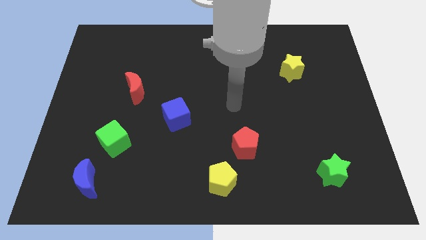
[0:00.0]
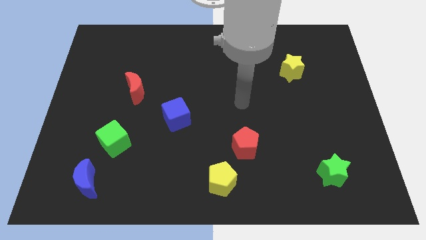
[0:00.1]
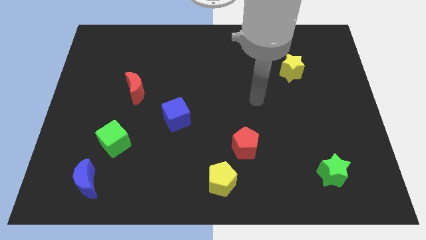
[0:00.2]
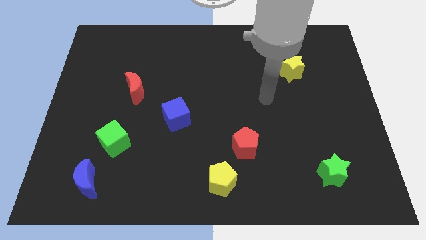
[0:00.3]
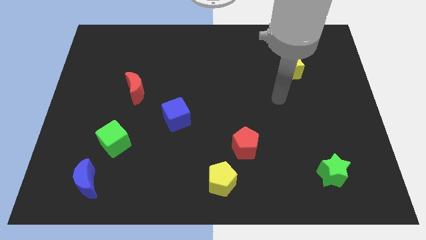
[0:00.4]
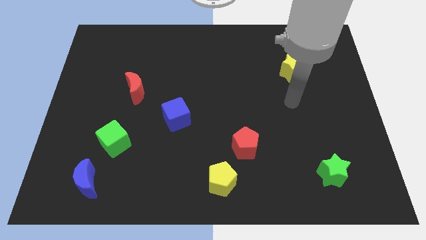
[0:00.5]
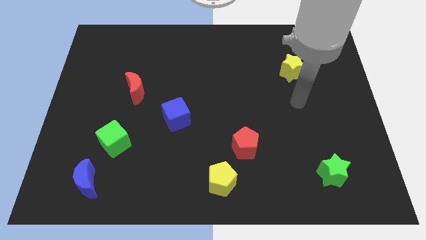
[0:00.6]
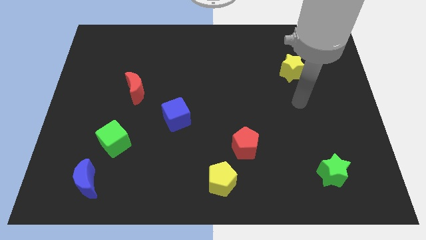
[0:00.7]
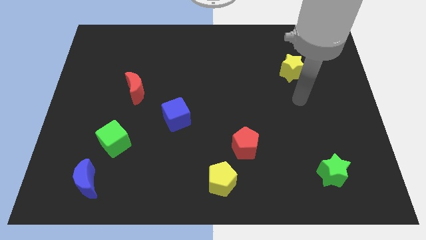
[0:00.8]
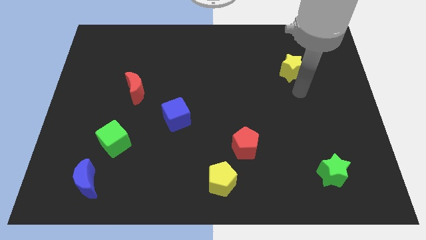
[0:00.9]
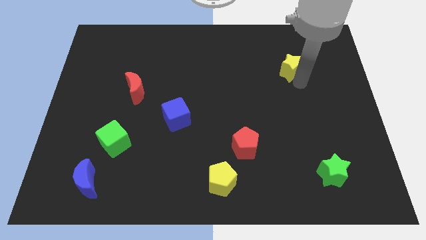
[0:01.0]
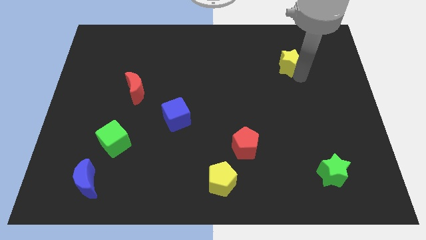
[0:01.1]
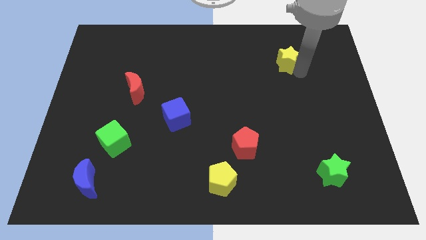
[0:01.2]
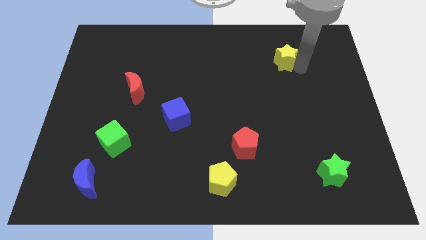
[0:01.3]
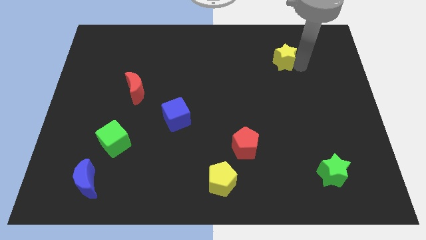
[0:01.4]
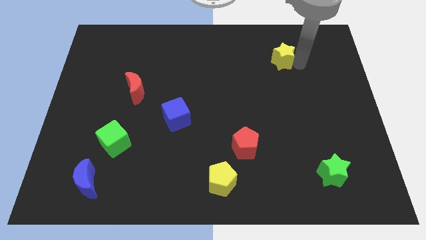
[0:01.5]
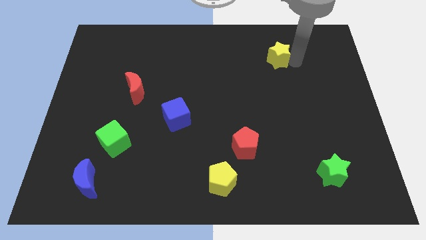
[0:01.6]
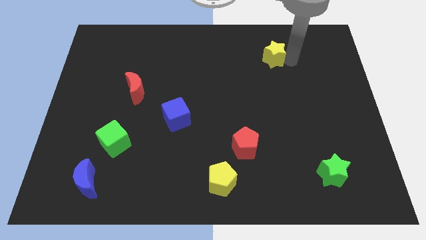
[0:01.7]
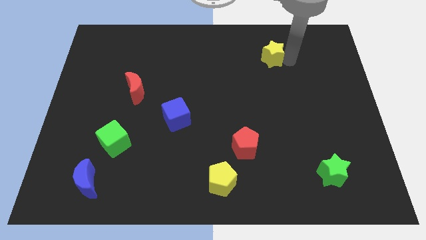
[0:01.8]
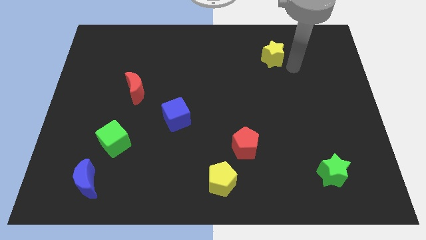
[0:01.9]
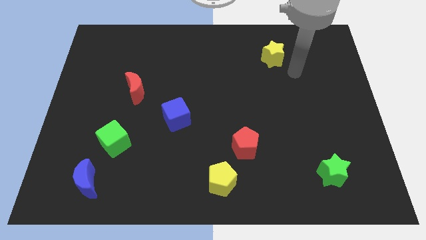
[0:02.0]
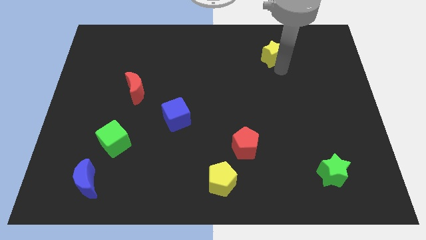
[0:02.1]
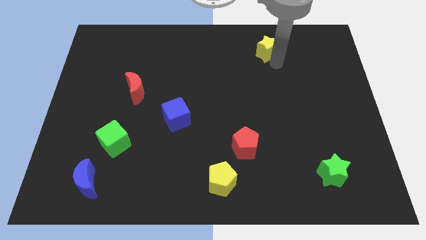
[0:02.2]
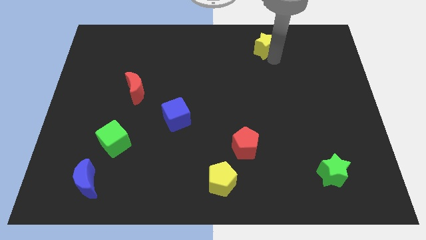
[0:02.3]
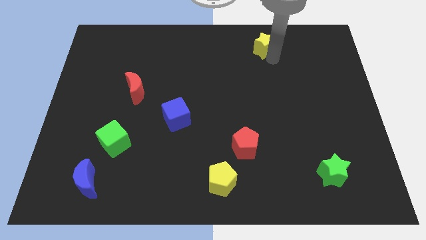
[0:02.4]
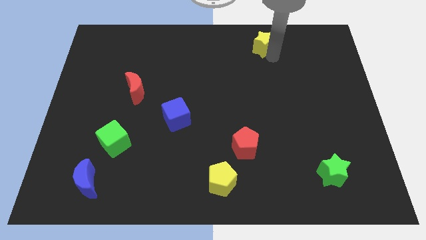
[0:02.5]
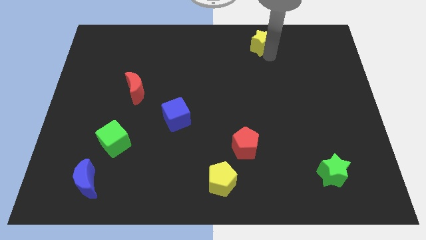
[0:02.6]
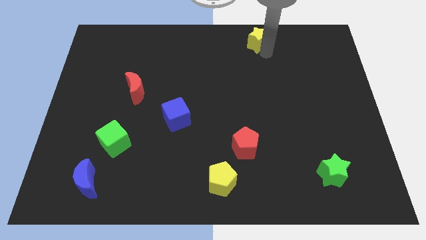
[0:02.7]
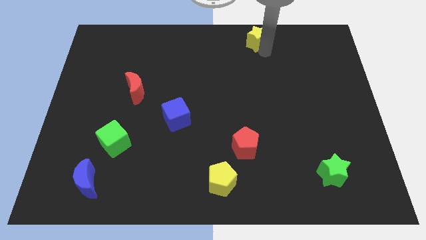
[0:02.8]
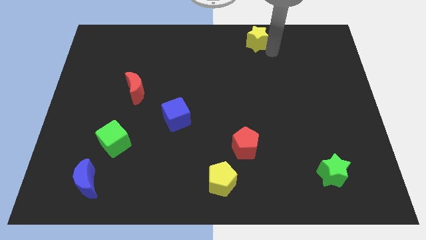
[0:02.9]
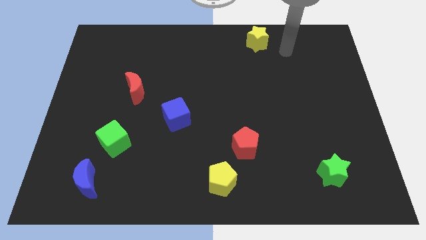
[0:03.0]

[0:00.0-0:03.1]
move the yellow star to the top side of the table

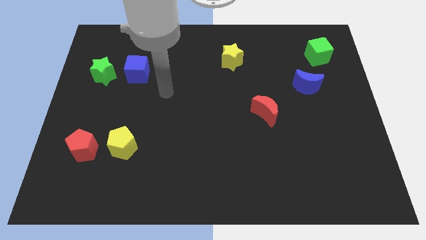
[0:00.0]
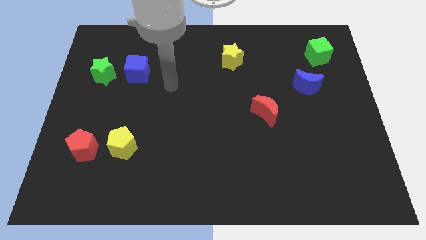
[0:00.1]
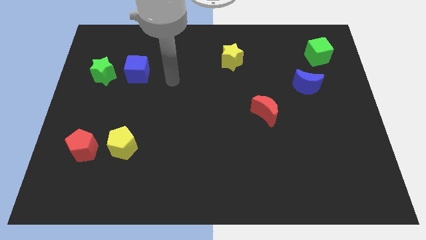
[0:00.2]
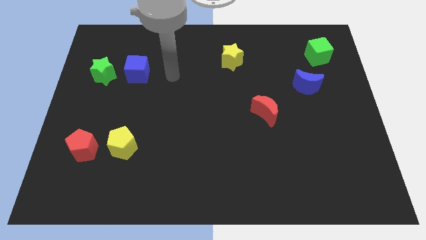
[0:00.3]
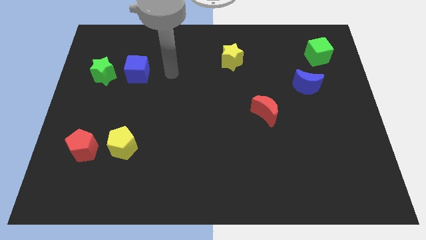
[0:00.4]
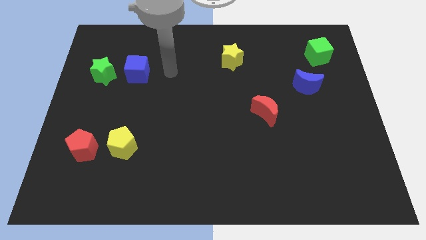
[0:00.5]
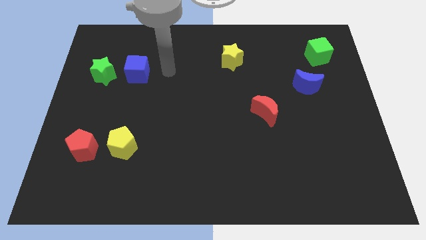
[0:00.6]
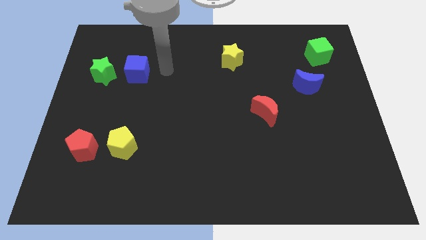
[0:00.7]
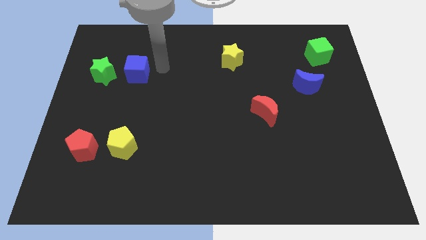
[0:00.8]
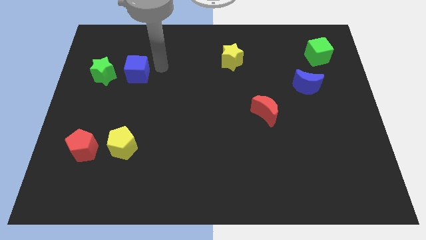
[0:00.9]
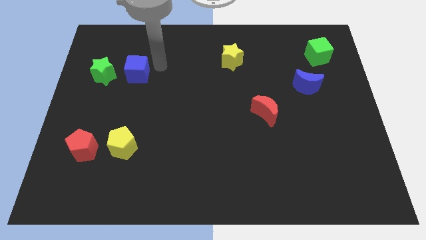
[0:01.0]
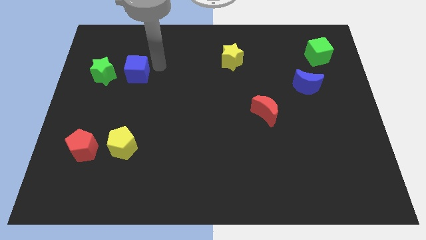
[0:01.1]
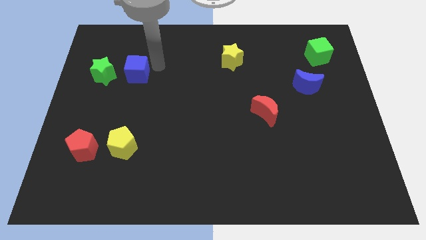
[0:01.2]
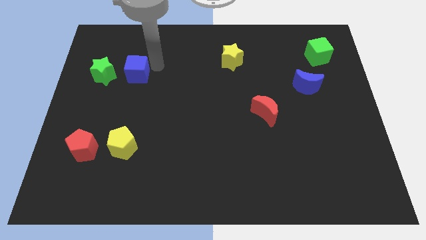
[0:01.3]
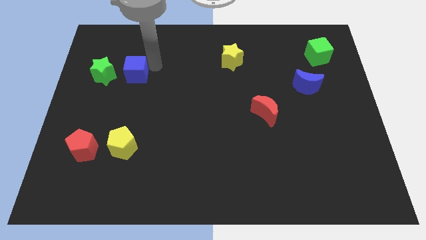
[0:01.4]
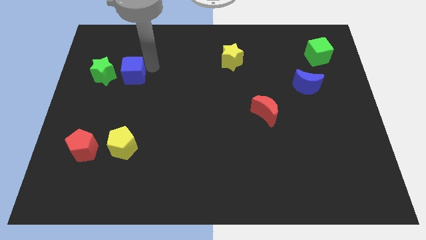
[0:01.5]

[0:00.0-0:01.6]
place the blue cube on the right side of green star

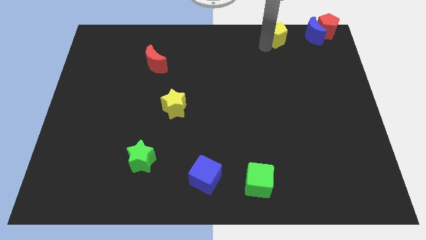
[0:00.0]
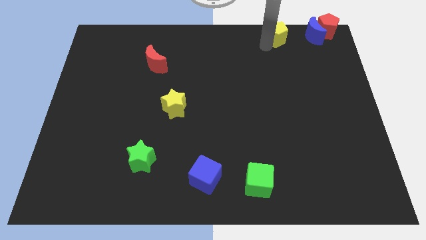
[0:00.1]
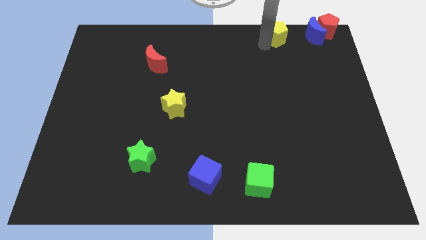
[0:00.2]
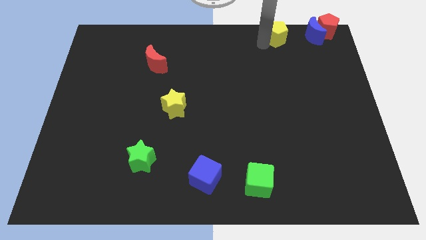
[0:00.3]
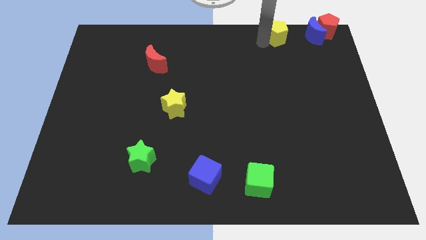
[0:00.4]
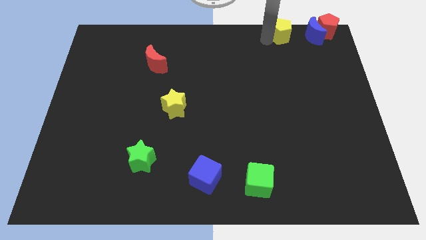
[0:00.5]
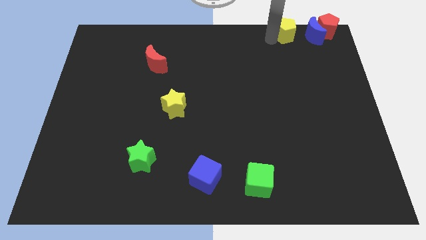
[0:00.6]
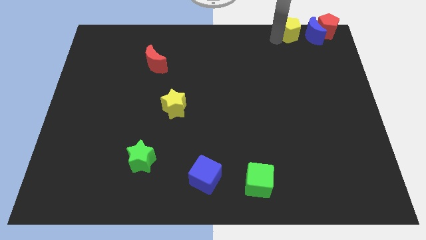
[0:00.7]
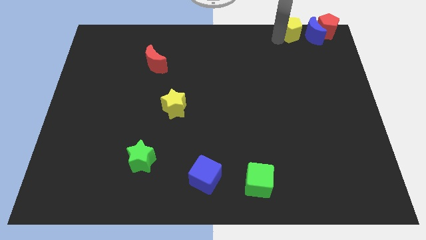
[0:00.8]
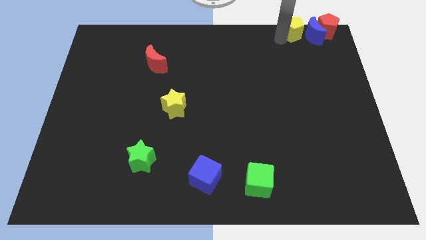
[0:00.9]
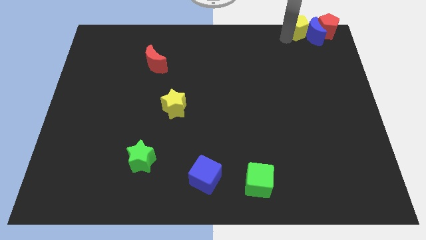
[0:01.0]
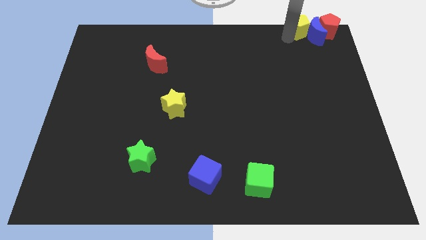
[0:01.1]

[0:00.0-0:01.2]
move yellow pentagon into blue moon

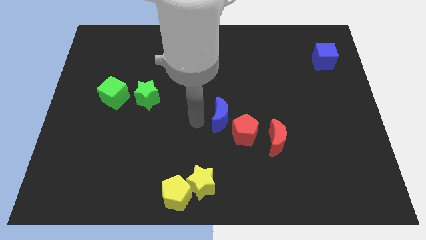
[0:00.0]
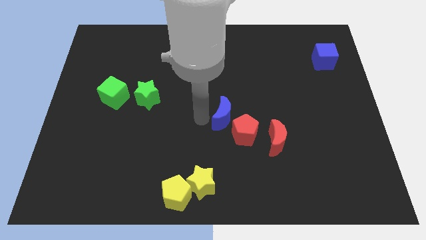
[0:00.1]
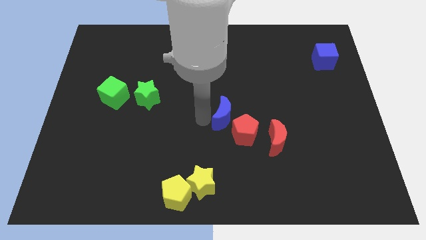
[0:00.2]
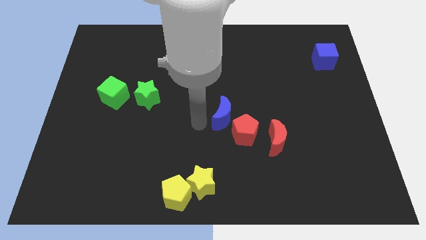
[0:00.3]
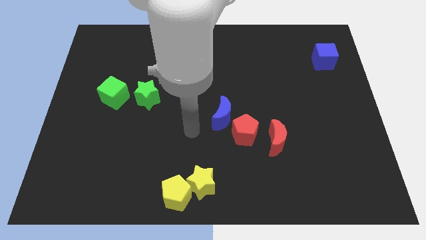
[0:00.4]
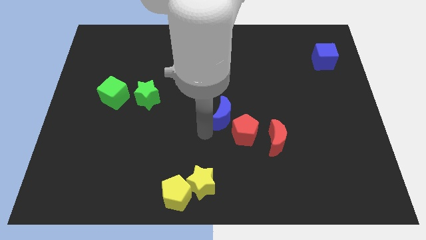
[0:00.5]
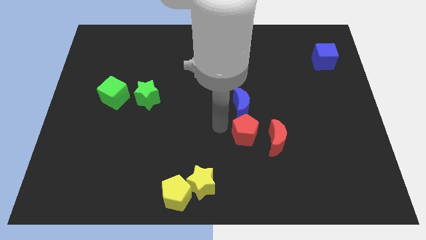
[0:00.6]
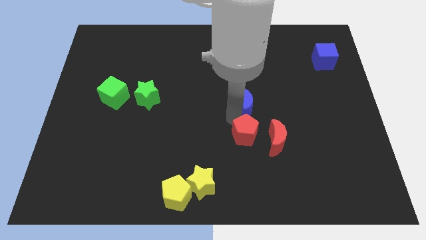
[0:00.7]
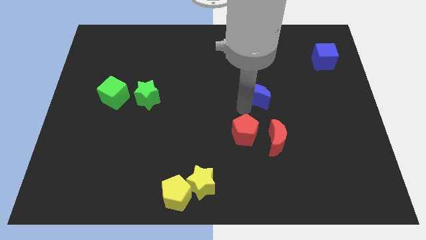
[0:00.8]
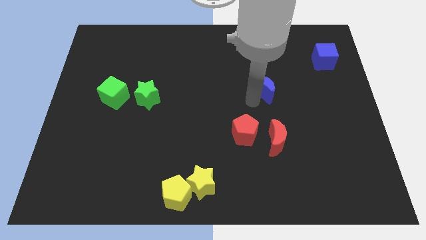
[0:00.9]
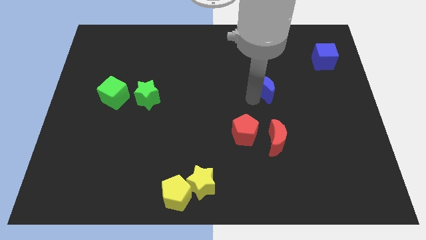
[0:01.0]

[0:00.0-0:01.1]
take the blue crescent away from the red pentagon

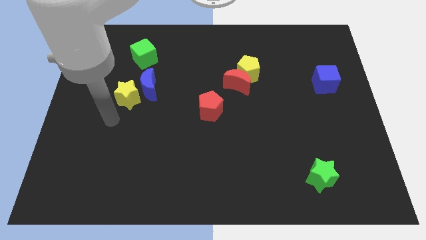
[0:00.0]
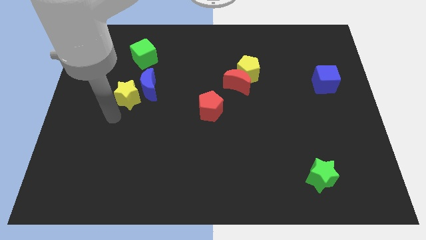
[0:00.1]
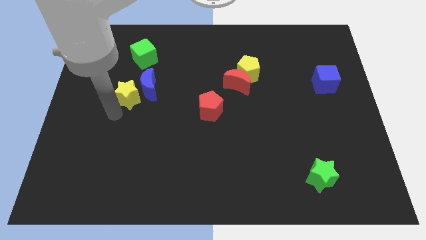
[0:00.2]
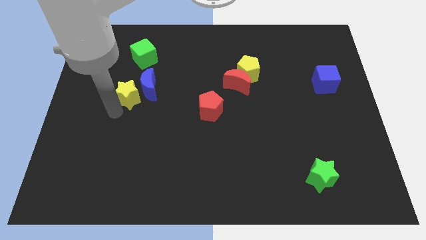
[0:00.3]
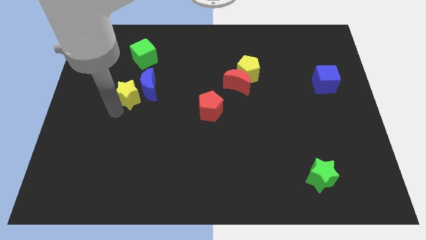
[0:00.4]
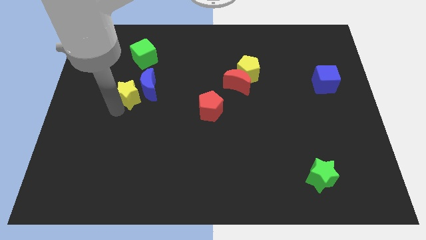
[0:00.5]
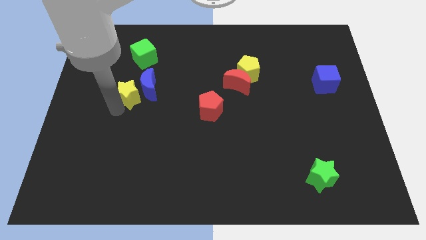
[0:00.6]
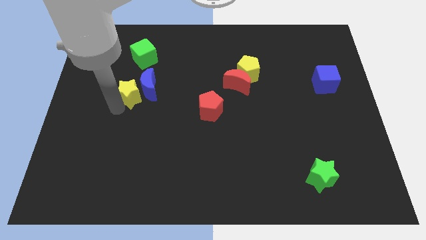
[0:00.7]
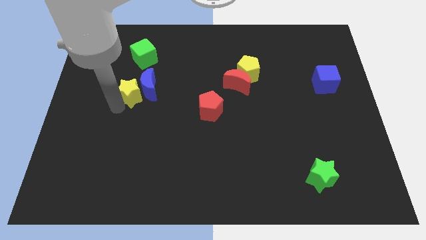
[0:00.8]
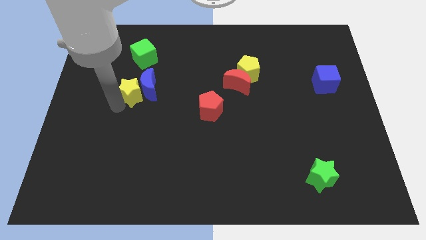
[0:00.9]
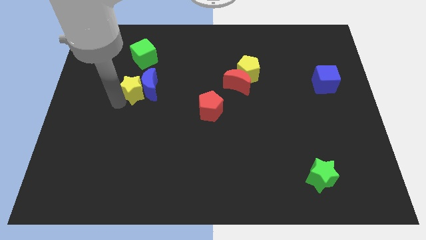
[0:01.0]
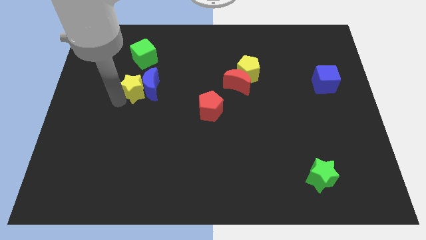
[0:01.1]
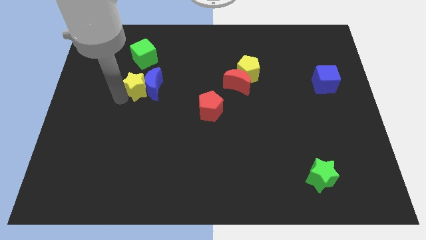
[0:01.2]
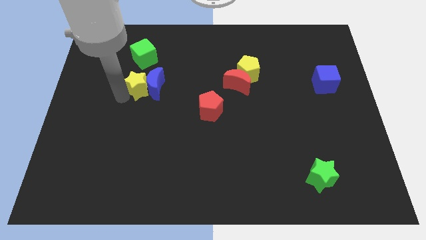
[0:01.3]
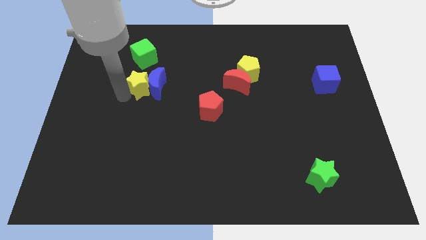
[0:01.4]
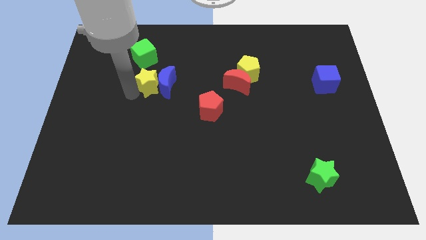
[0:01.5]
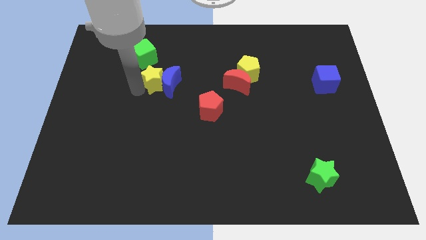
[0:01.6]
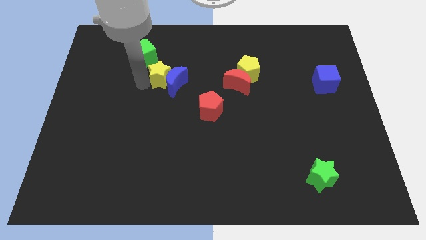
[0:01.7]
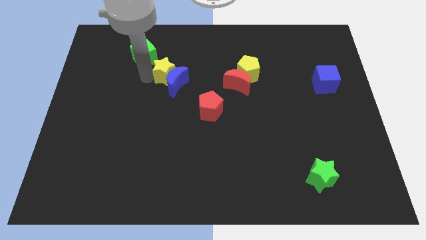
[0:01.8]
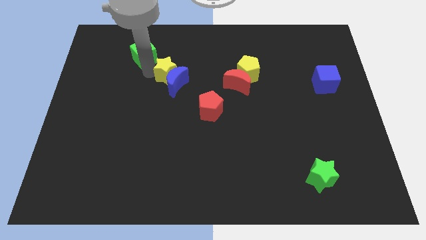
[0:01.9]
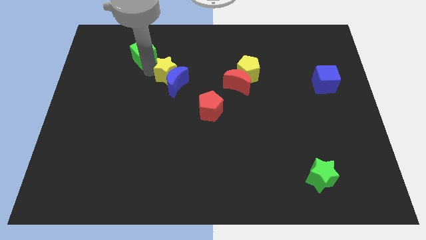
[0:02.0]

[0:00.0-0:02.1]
push the blue crescent with the yellow star towards the center of the board
